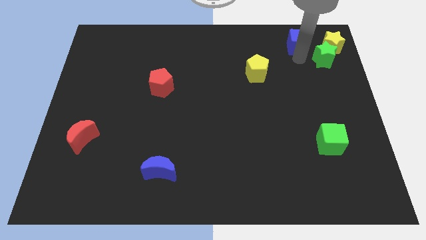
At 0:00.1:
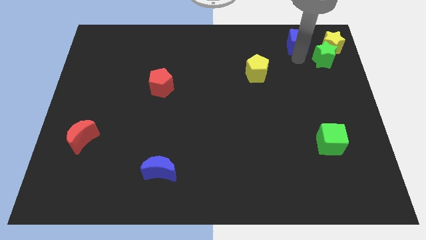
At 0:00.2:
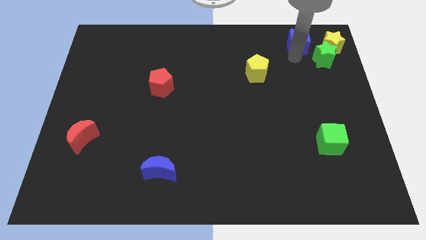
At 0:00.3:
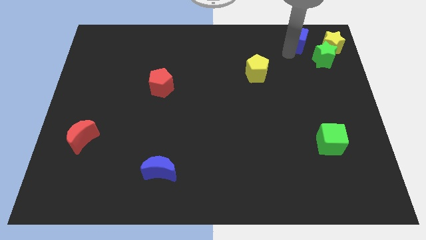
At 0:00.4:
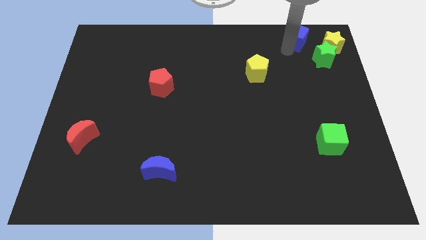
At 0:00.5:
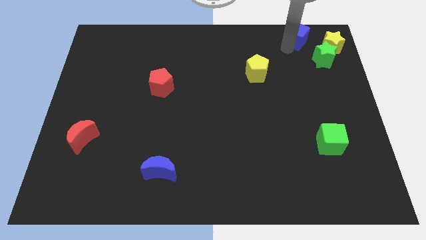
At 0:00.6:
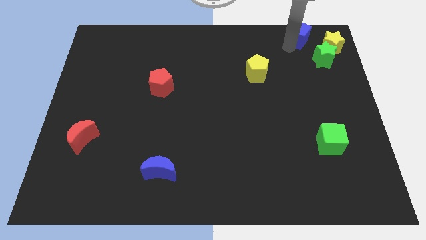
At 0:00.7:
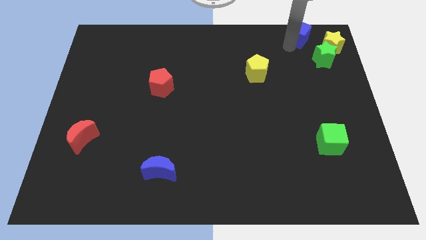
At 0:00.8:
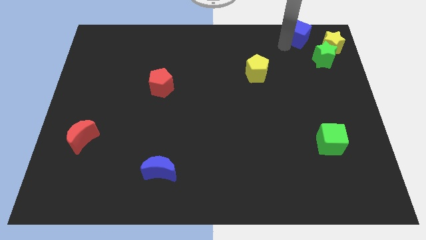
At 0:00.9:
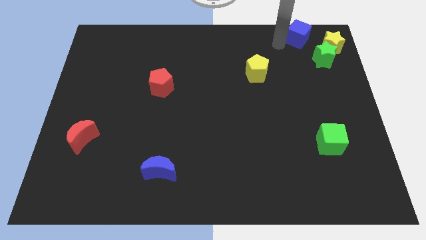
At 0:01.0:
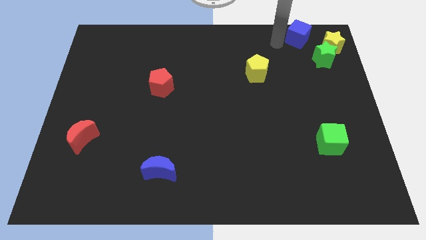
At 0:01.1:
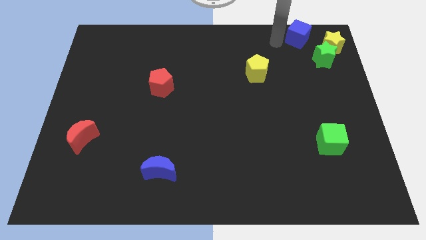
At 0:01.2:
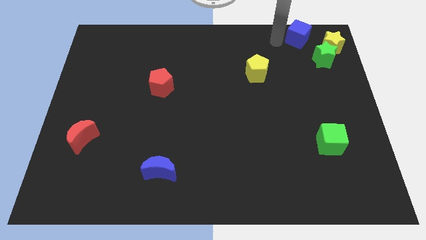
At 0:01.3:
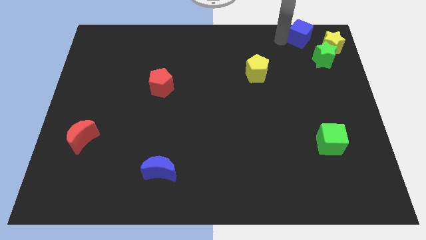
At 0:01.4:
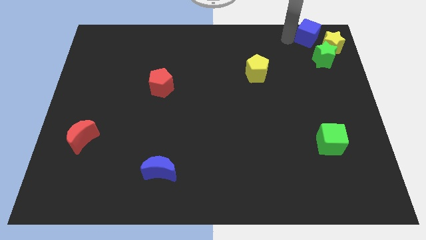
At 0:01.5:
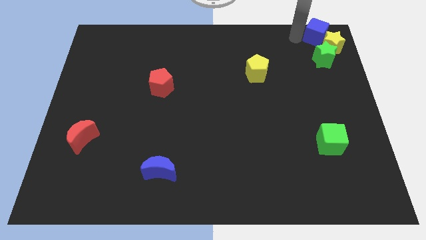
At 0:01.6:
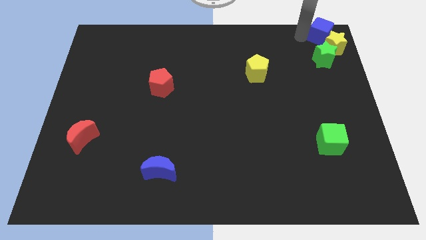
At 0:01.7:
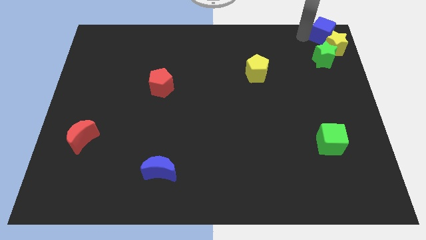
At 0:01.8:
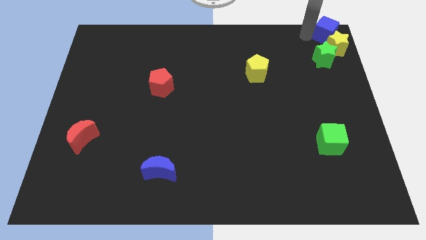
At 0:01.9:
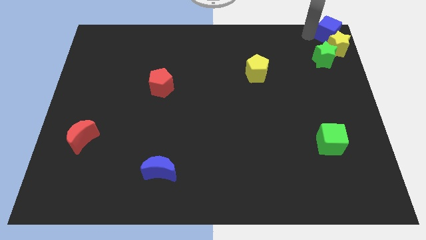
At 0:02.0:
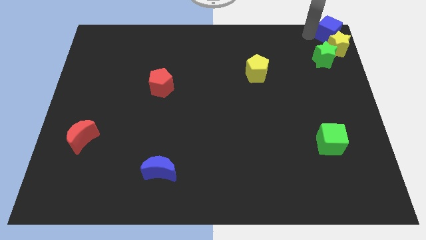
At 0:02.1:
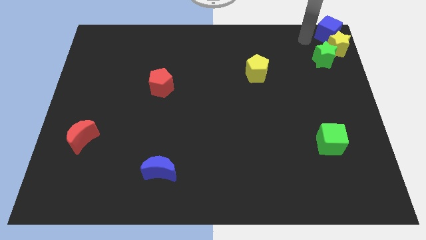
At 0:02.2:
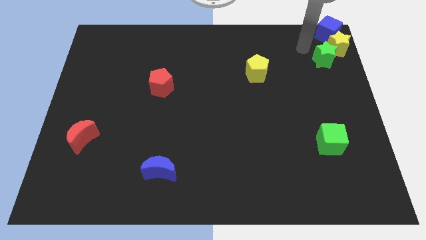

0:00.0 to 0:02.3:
place the blue cube at the top right side of the board

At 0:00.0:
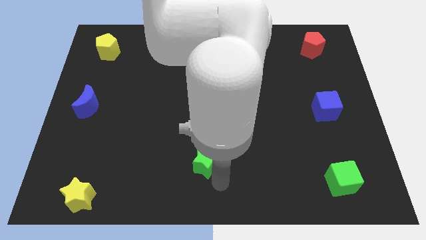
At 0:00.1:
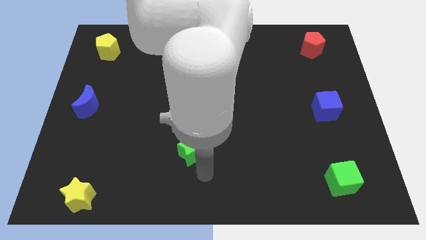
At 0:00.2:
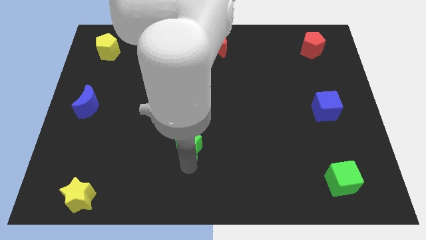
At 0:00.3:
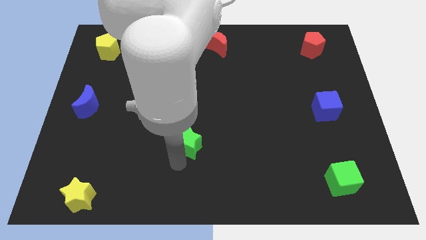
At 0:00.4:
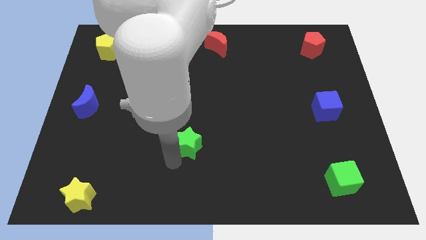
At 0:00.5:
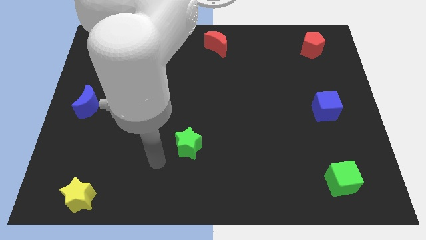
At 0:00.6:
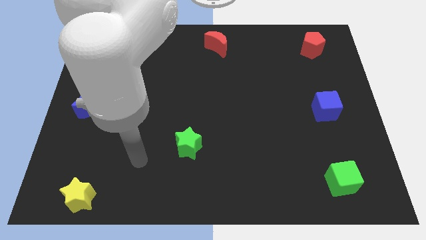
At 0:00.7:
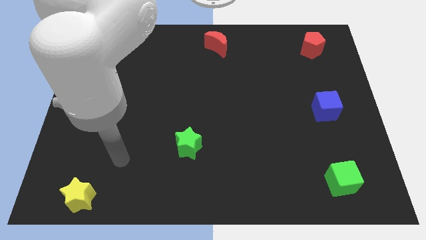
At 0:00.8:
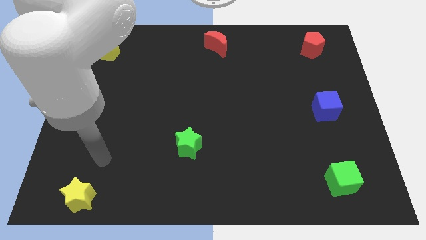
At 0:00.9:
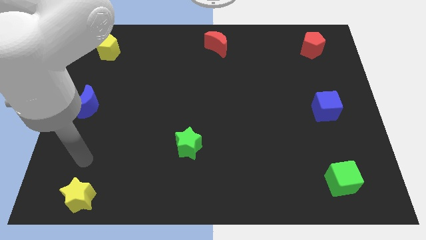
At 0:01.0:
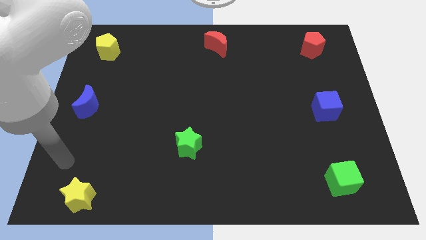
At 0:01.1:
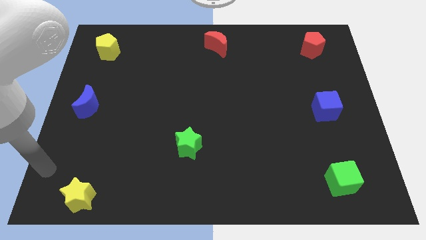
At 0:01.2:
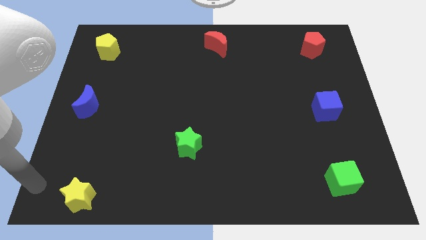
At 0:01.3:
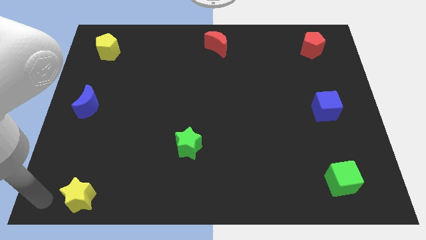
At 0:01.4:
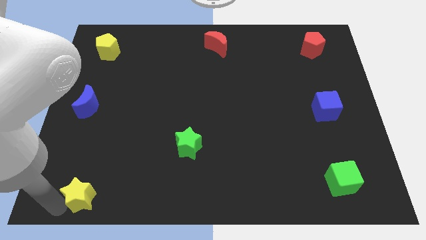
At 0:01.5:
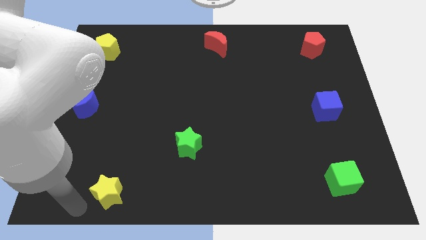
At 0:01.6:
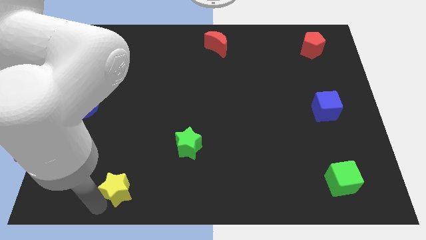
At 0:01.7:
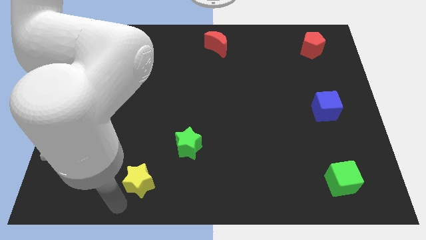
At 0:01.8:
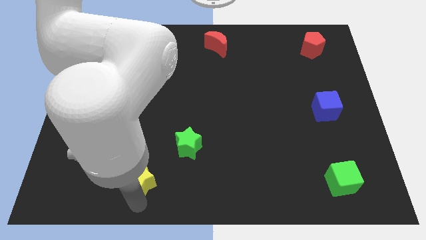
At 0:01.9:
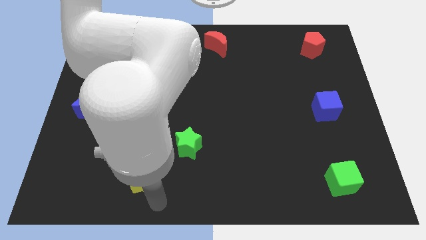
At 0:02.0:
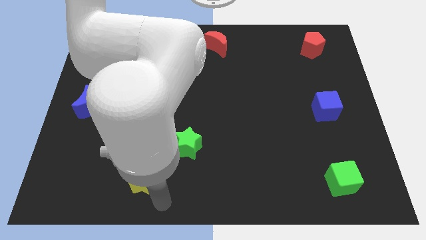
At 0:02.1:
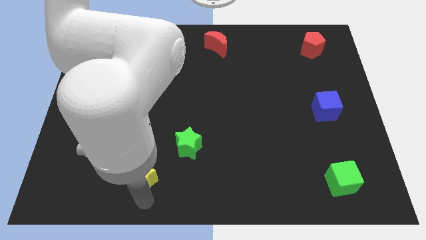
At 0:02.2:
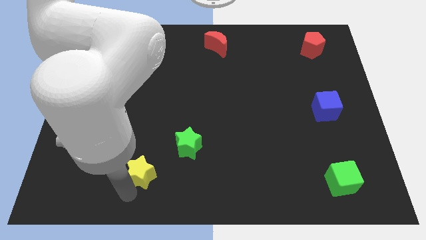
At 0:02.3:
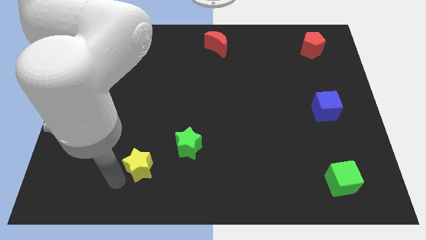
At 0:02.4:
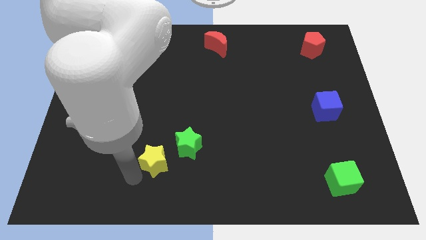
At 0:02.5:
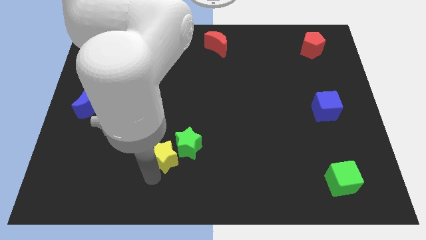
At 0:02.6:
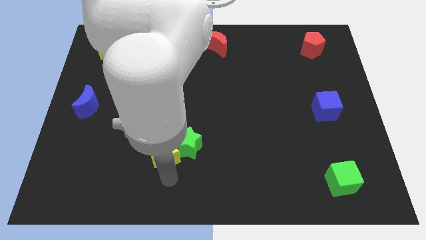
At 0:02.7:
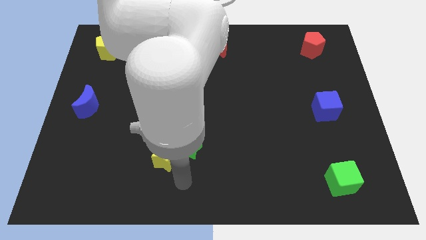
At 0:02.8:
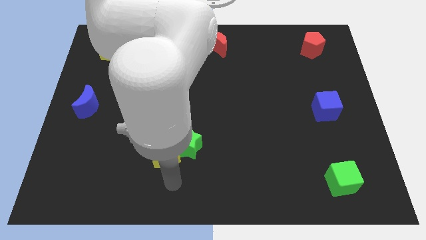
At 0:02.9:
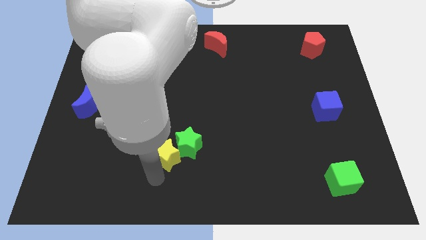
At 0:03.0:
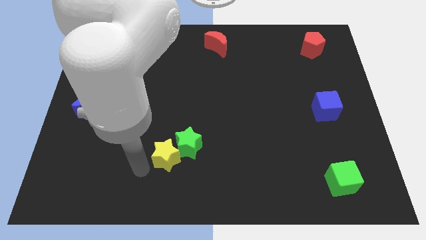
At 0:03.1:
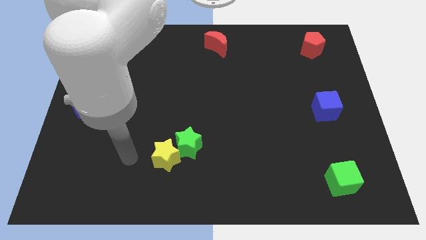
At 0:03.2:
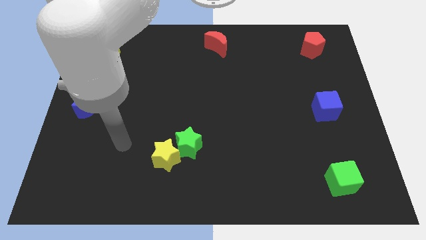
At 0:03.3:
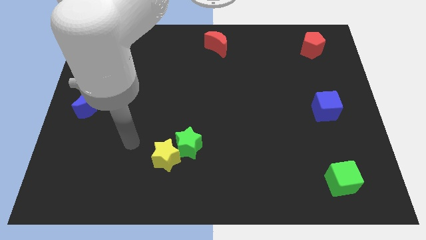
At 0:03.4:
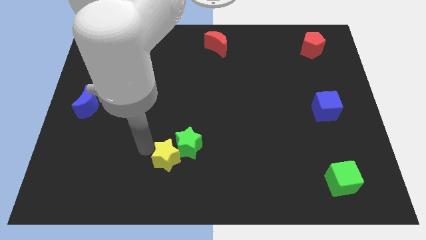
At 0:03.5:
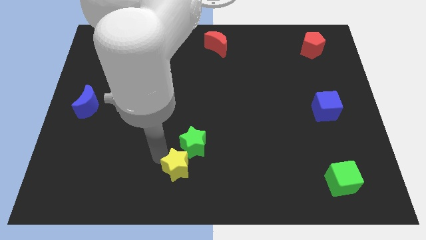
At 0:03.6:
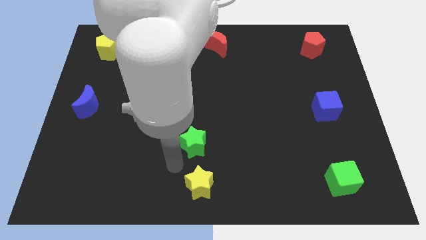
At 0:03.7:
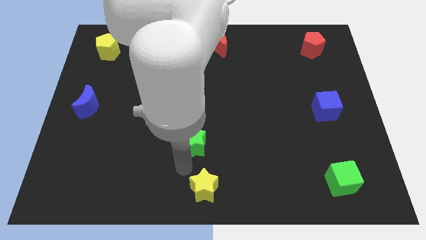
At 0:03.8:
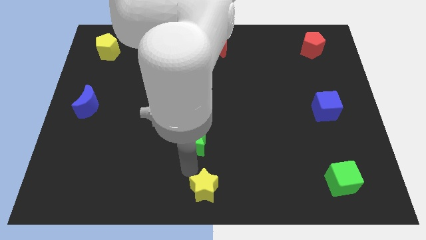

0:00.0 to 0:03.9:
move the yellow star towards the bottom center

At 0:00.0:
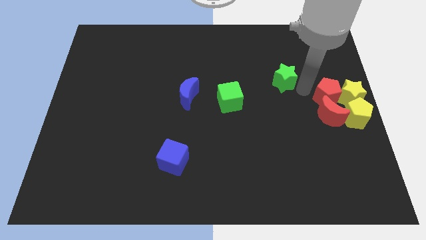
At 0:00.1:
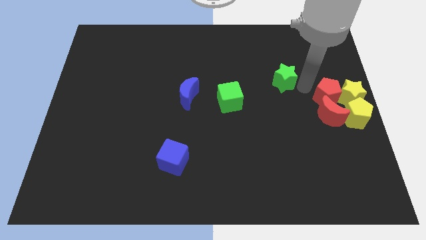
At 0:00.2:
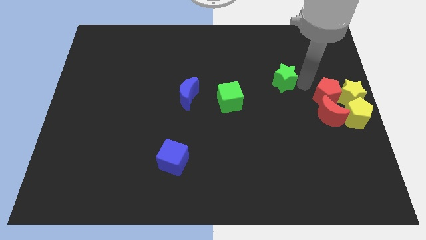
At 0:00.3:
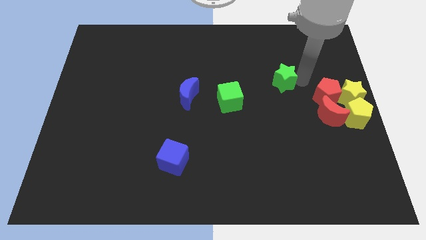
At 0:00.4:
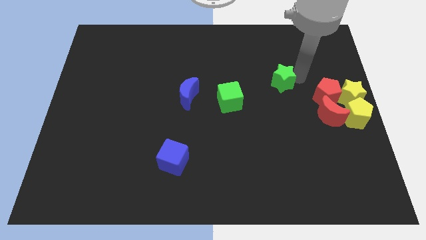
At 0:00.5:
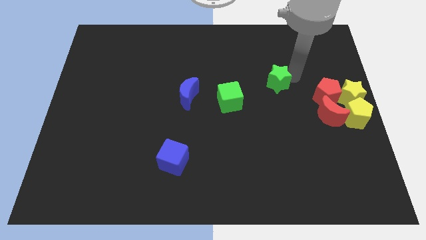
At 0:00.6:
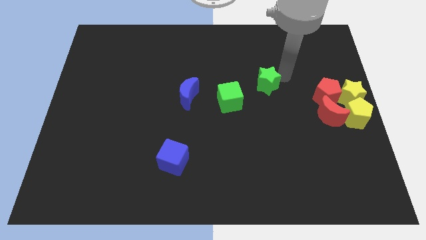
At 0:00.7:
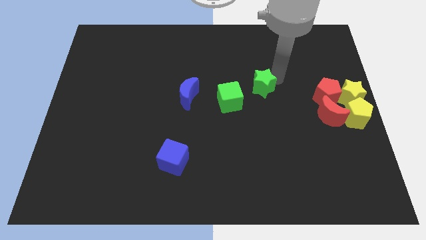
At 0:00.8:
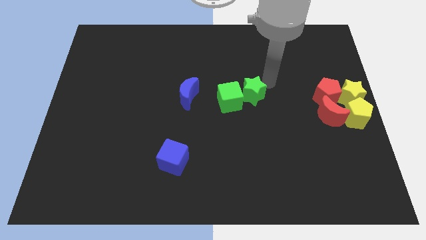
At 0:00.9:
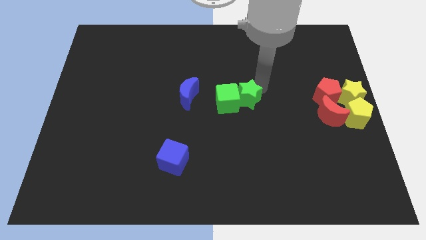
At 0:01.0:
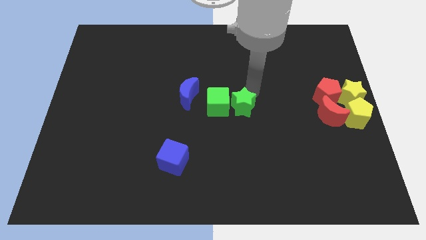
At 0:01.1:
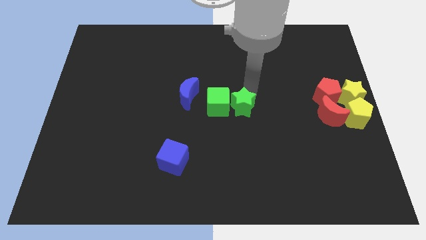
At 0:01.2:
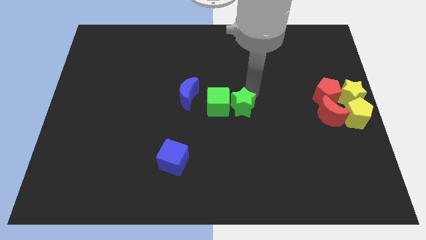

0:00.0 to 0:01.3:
put the green star parallel right to the green cube

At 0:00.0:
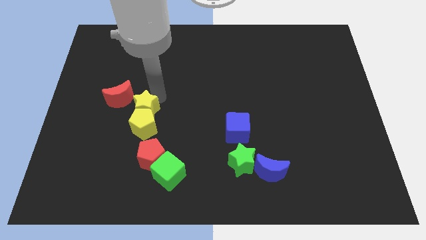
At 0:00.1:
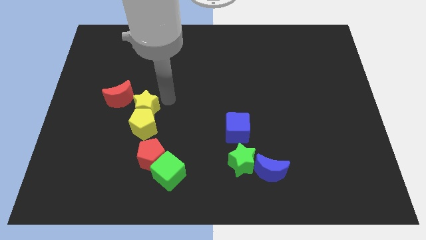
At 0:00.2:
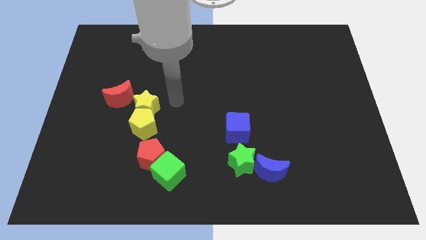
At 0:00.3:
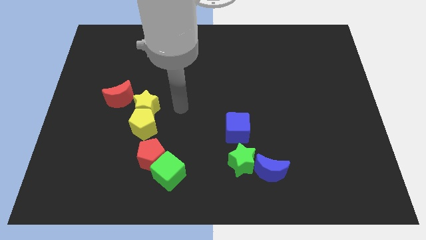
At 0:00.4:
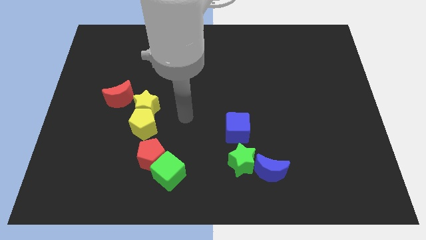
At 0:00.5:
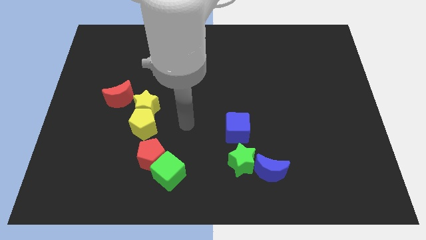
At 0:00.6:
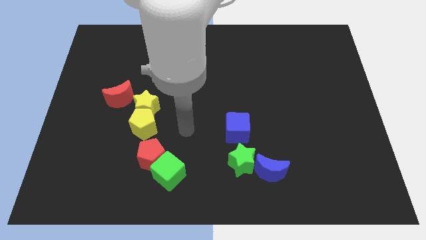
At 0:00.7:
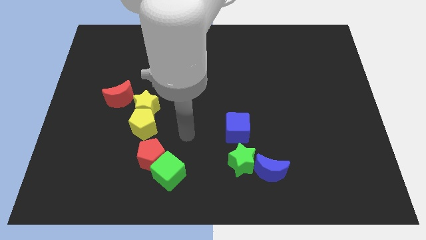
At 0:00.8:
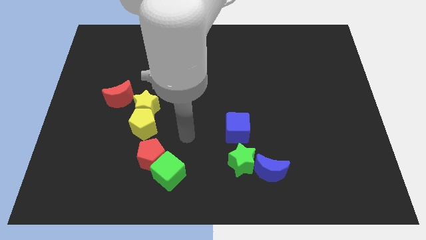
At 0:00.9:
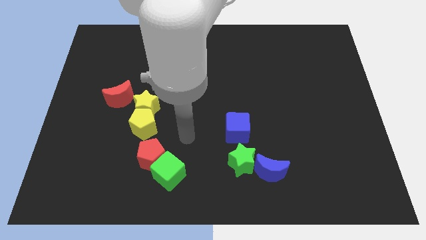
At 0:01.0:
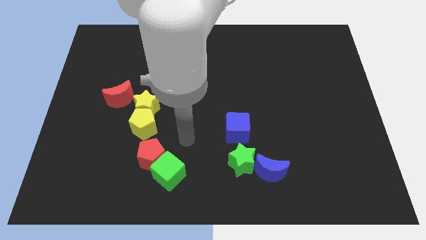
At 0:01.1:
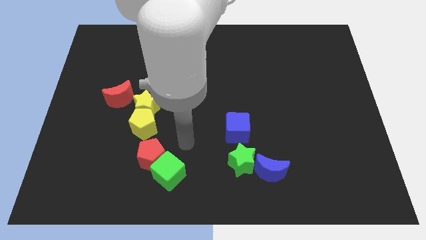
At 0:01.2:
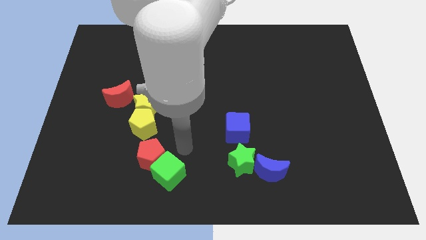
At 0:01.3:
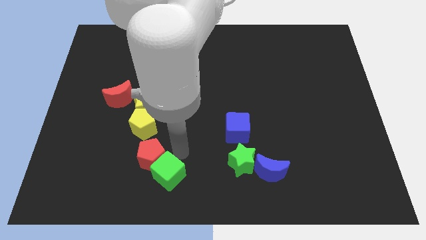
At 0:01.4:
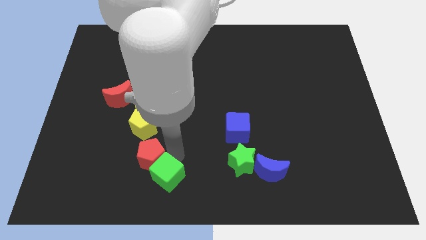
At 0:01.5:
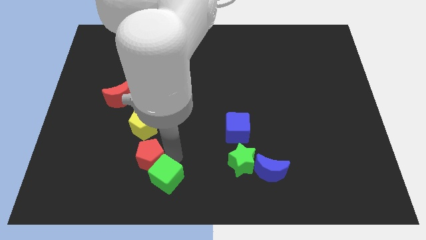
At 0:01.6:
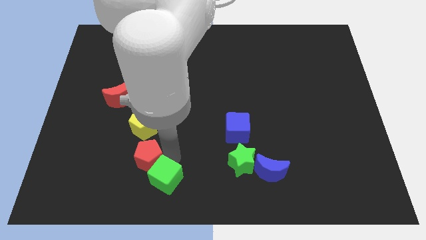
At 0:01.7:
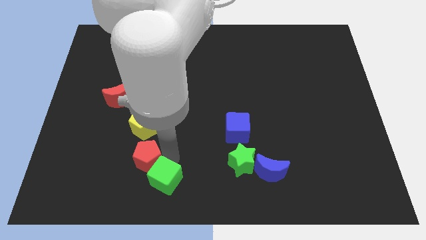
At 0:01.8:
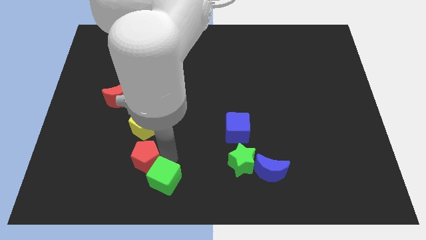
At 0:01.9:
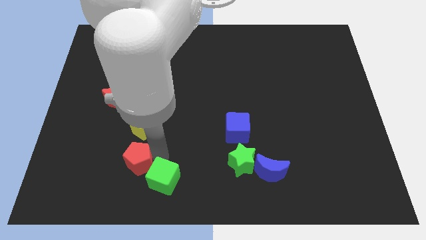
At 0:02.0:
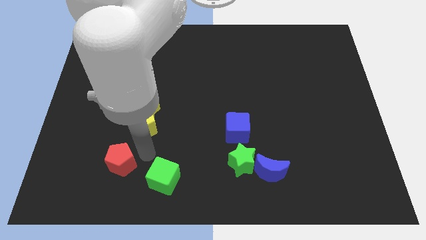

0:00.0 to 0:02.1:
separate red pentagon from green cube
